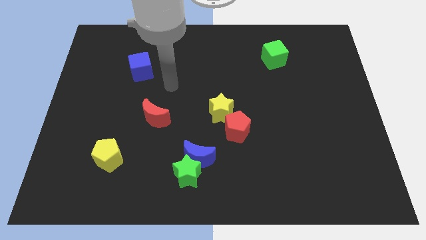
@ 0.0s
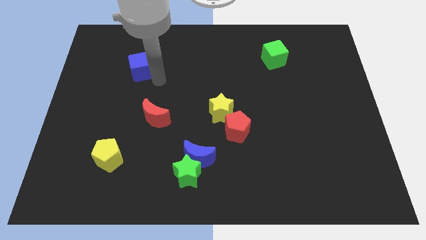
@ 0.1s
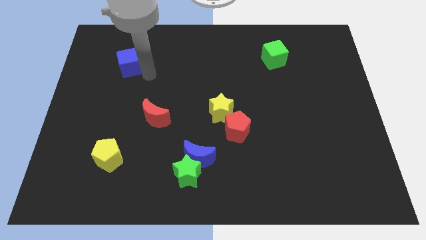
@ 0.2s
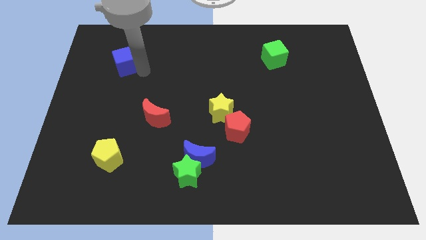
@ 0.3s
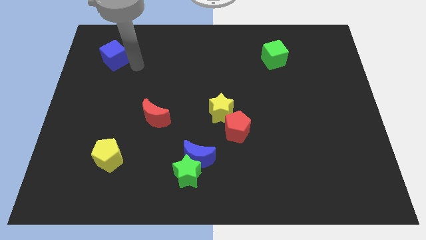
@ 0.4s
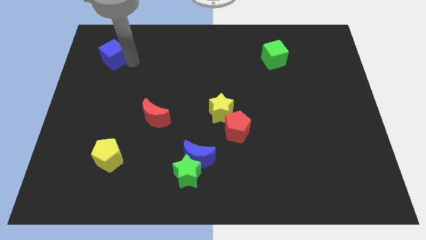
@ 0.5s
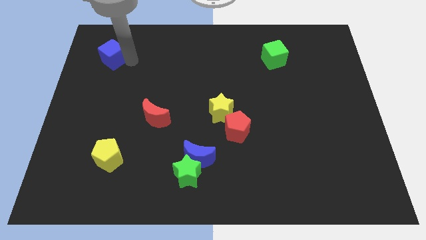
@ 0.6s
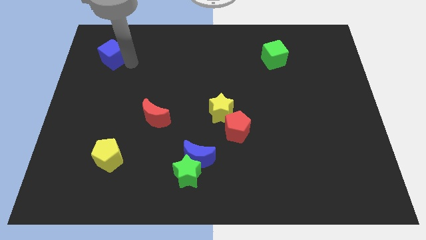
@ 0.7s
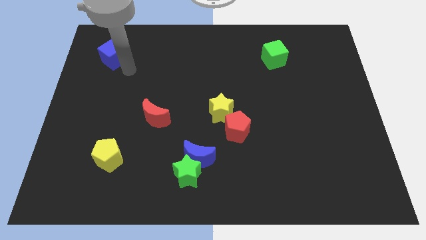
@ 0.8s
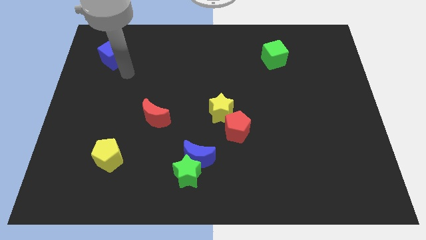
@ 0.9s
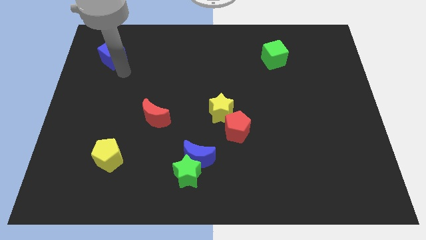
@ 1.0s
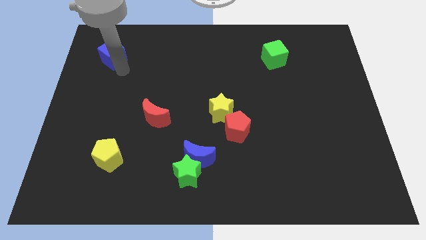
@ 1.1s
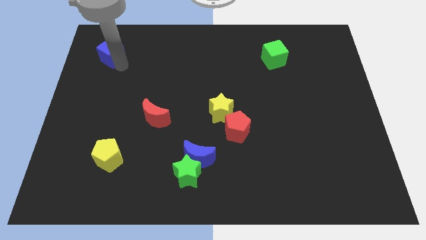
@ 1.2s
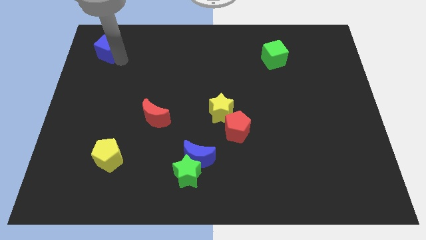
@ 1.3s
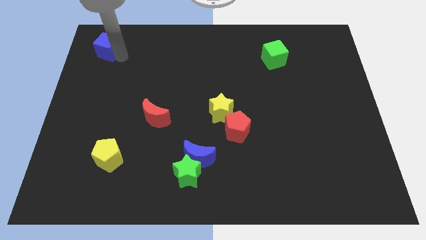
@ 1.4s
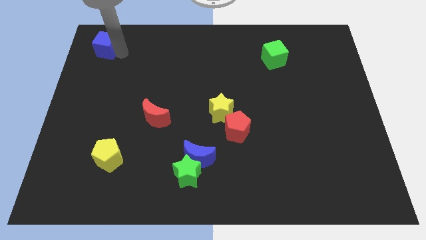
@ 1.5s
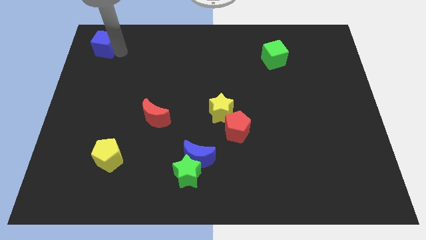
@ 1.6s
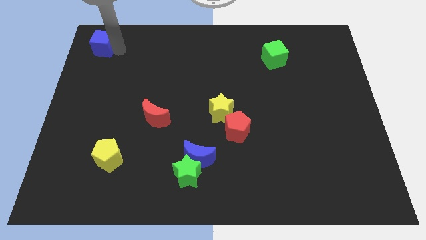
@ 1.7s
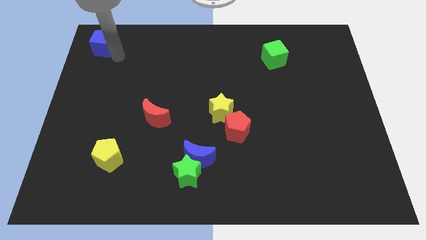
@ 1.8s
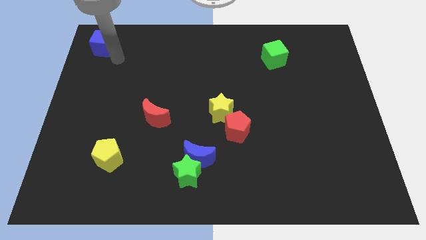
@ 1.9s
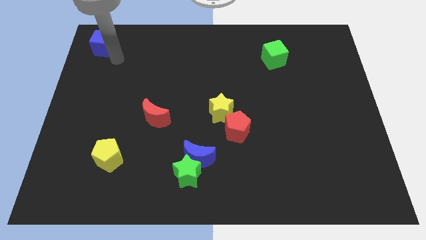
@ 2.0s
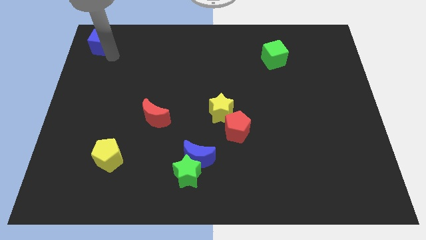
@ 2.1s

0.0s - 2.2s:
move blue cube towards top left corner of the board

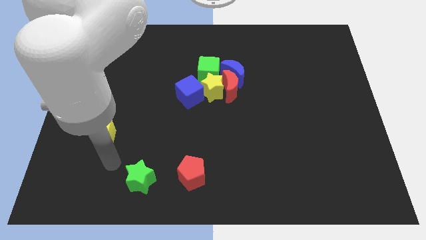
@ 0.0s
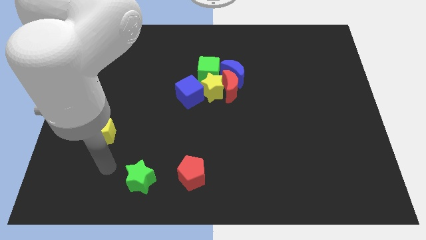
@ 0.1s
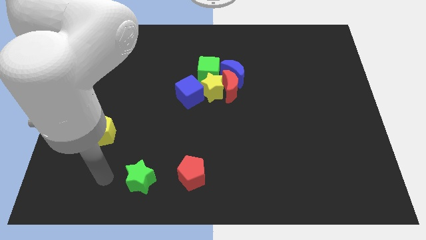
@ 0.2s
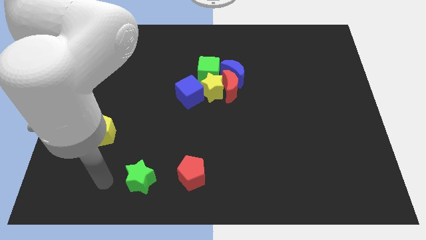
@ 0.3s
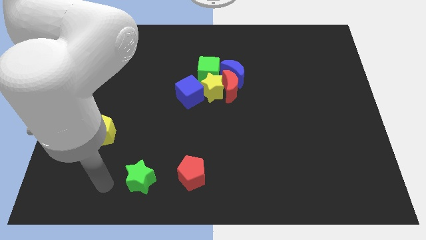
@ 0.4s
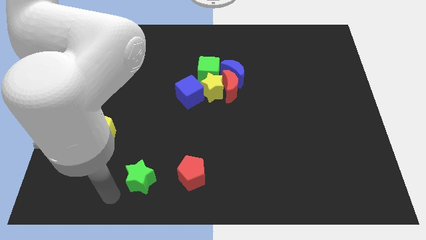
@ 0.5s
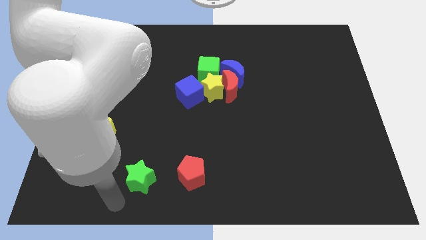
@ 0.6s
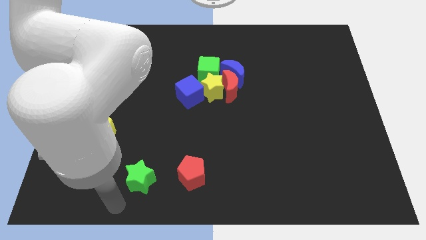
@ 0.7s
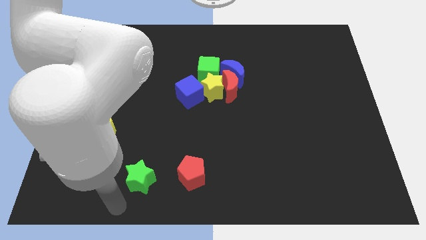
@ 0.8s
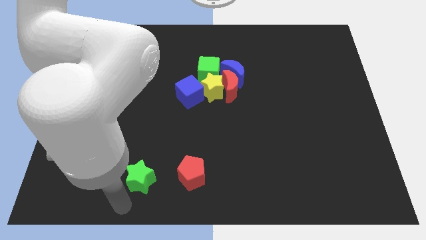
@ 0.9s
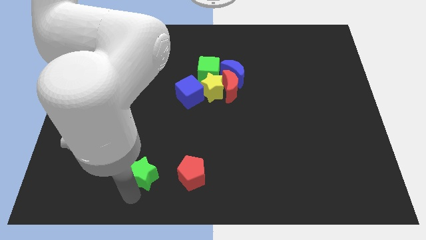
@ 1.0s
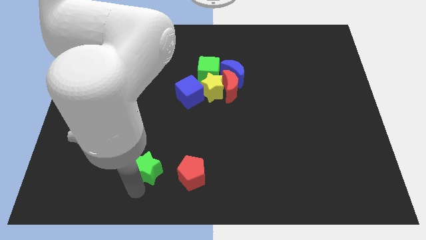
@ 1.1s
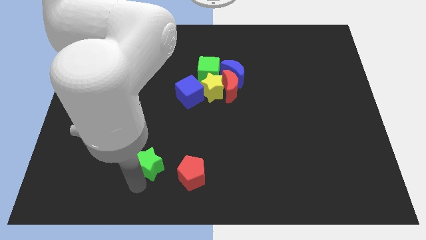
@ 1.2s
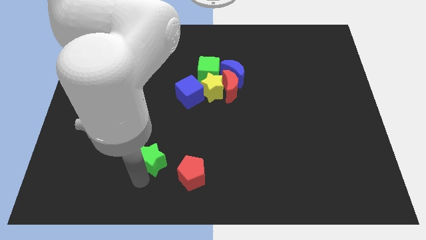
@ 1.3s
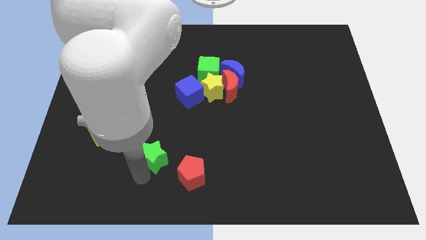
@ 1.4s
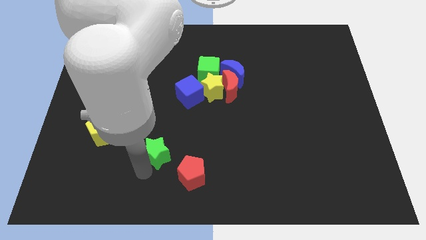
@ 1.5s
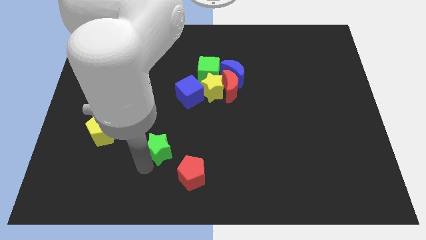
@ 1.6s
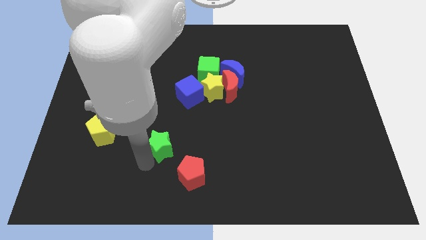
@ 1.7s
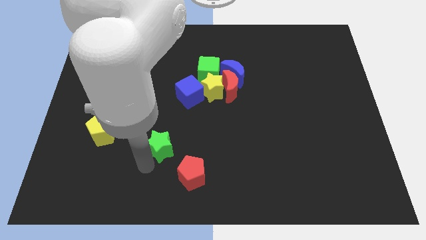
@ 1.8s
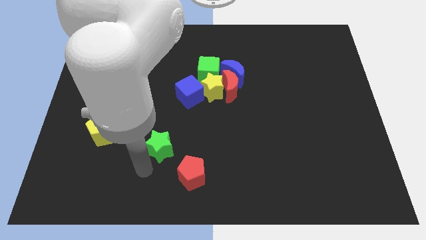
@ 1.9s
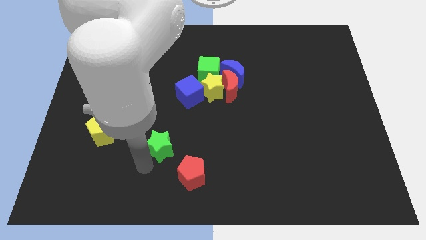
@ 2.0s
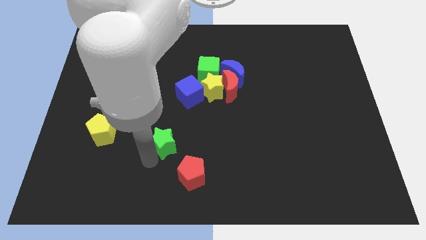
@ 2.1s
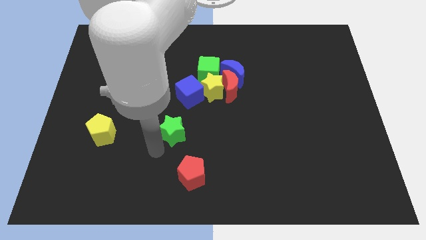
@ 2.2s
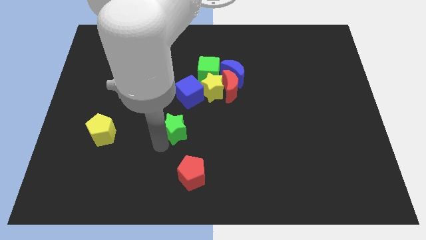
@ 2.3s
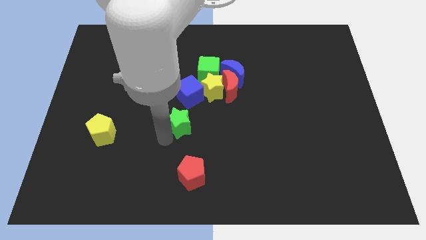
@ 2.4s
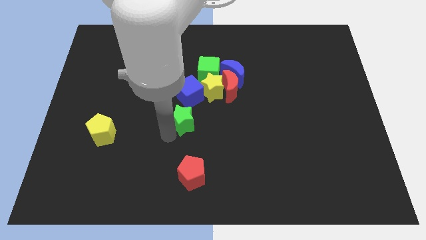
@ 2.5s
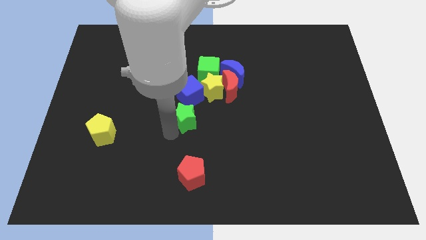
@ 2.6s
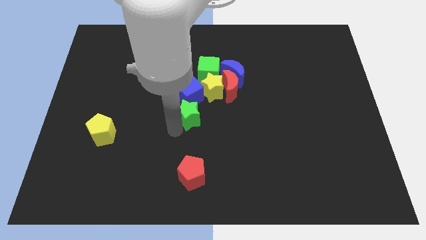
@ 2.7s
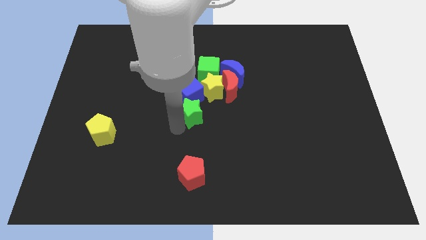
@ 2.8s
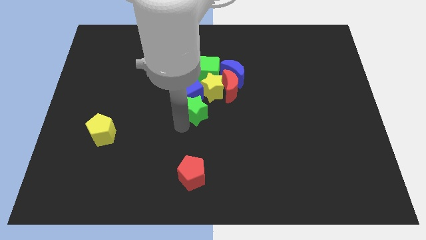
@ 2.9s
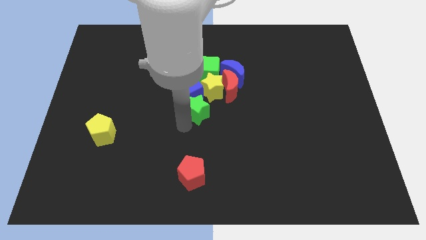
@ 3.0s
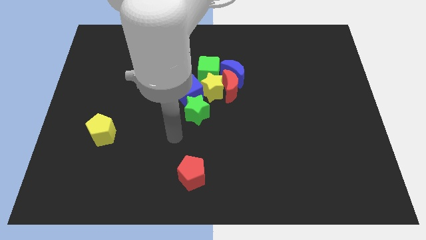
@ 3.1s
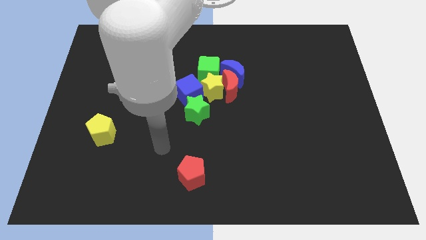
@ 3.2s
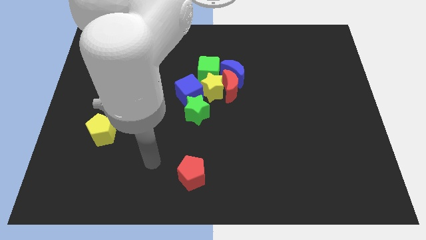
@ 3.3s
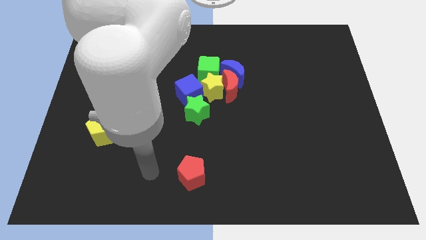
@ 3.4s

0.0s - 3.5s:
separate green star from red pentagon

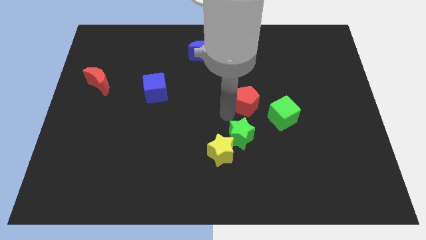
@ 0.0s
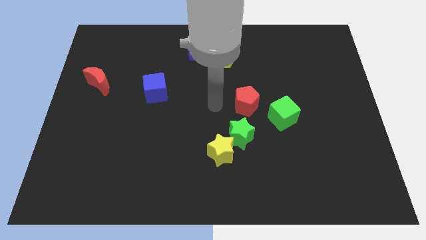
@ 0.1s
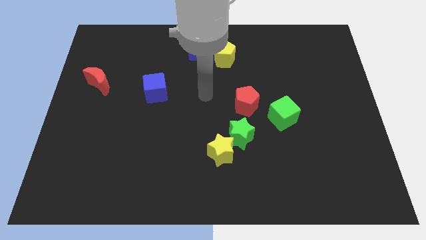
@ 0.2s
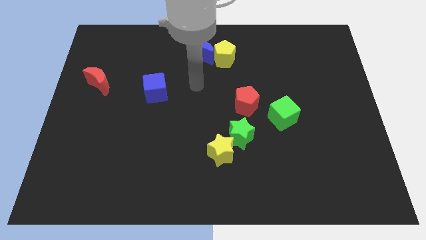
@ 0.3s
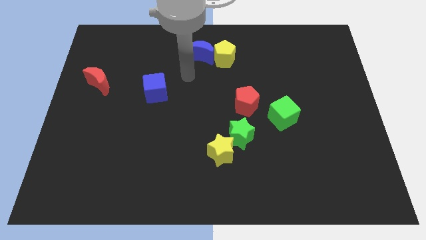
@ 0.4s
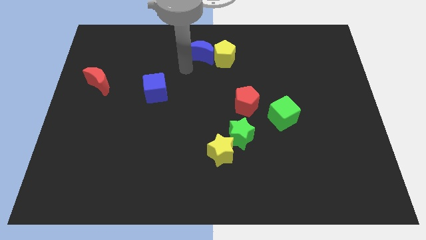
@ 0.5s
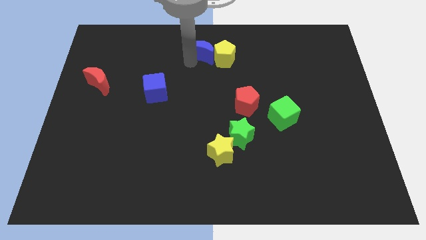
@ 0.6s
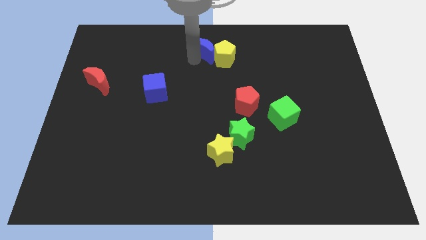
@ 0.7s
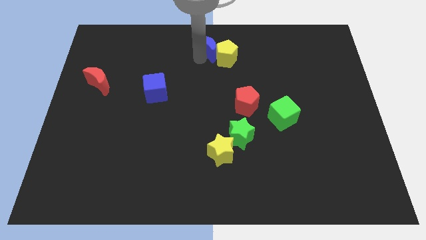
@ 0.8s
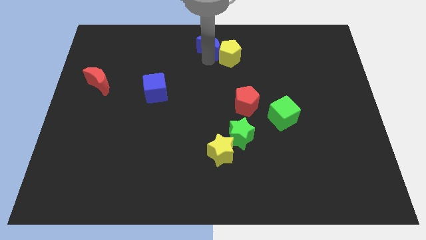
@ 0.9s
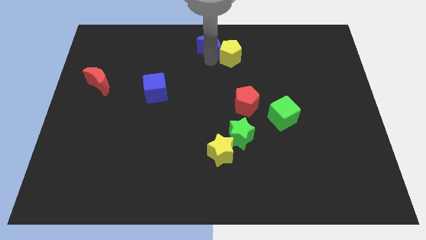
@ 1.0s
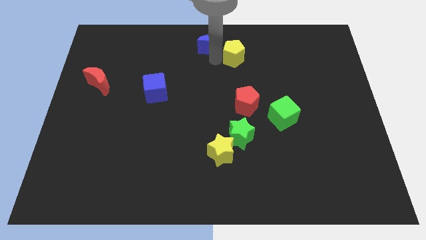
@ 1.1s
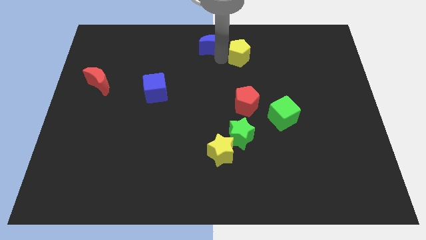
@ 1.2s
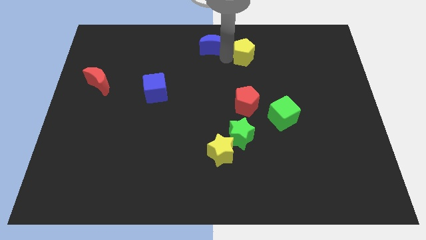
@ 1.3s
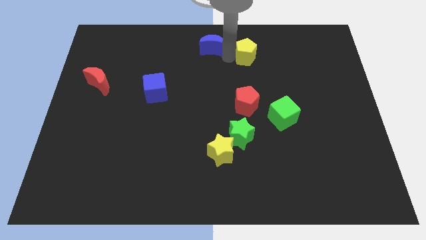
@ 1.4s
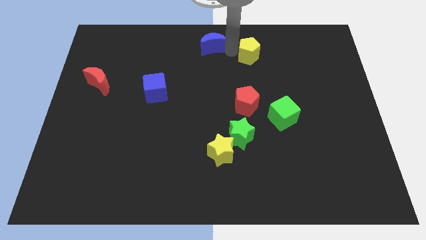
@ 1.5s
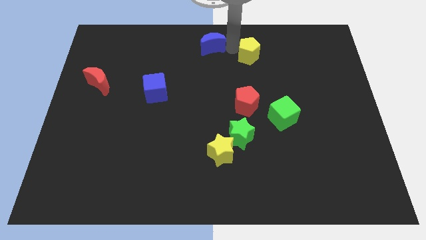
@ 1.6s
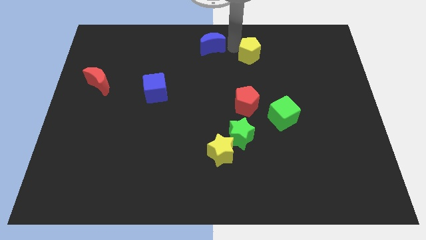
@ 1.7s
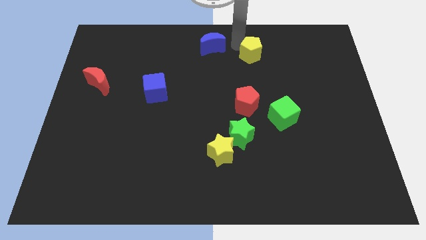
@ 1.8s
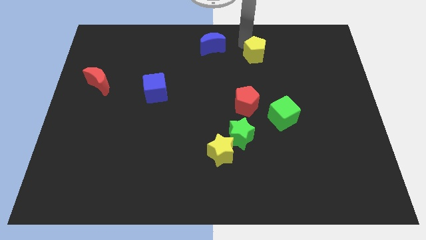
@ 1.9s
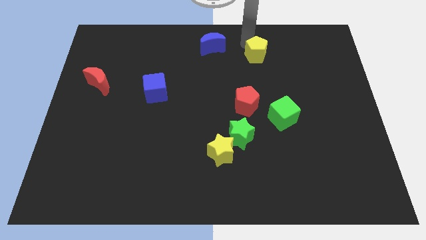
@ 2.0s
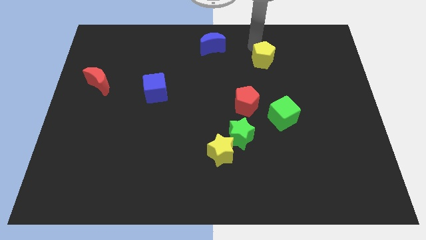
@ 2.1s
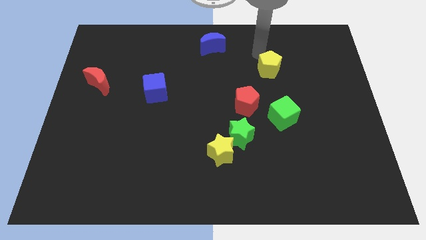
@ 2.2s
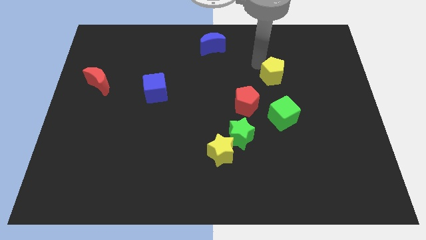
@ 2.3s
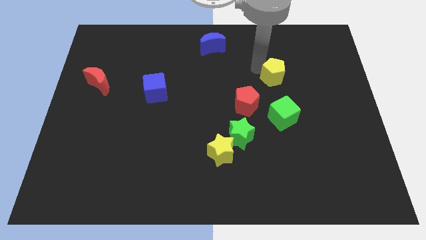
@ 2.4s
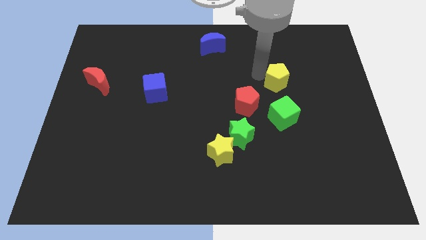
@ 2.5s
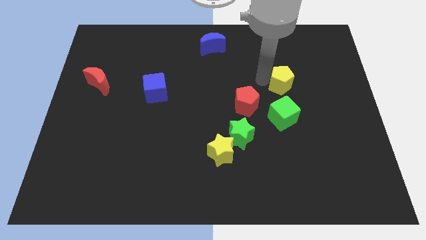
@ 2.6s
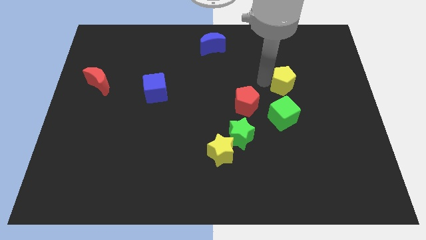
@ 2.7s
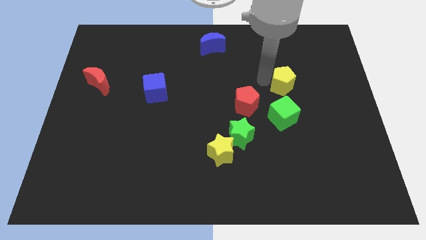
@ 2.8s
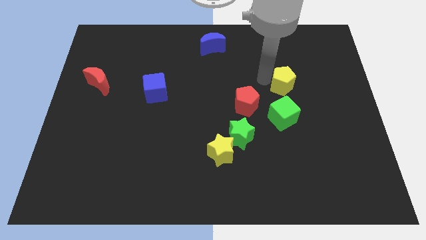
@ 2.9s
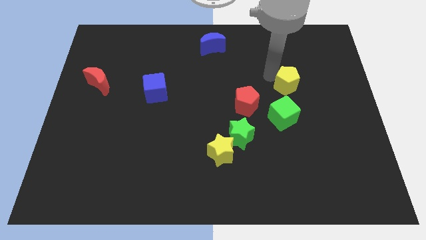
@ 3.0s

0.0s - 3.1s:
move yellow pentagon away from the blue moon

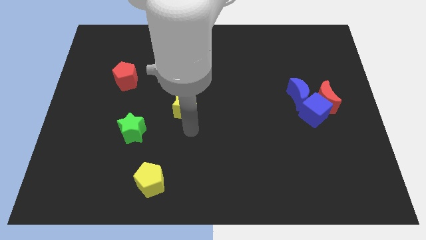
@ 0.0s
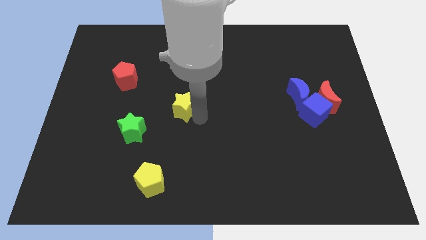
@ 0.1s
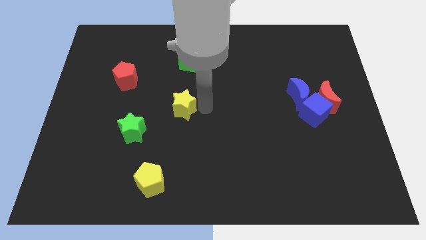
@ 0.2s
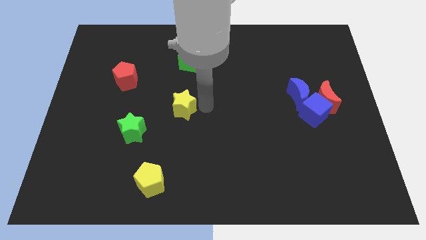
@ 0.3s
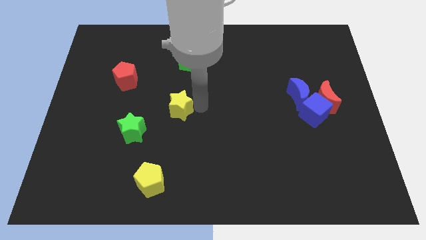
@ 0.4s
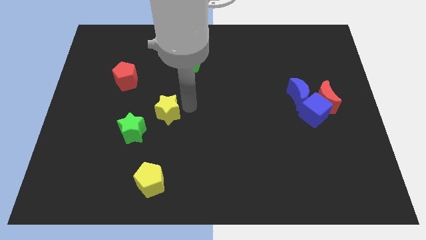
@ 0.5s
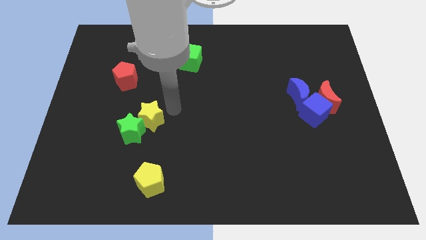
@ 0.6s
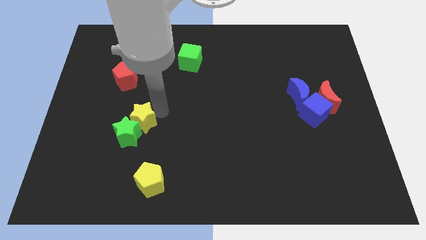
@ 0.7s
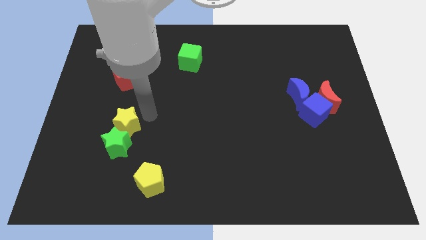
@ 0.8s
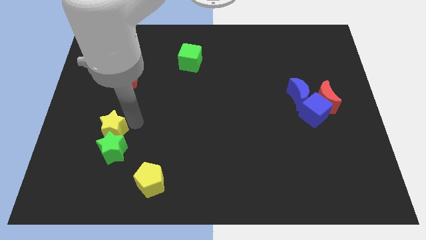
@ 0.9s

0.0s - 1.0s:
move the yellow star into green star
